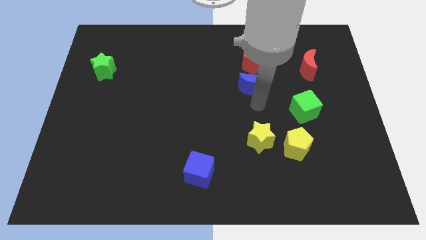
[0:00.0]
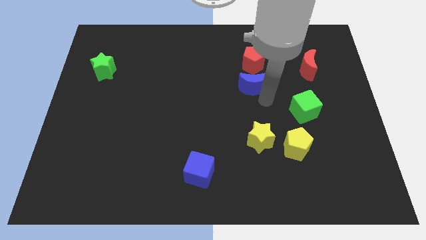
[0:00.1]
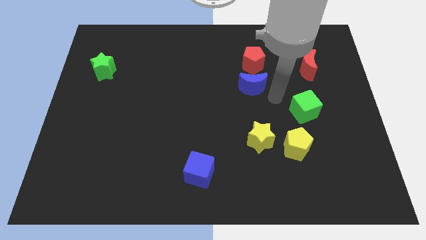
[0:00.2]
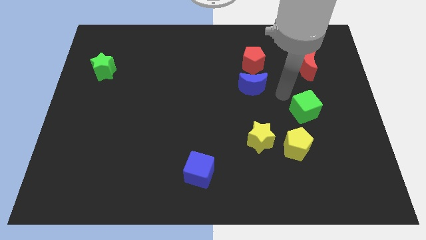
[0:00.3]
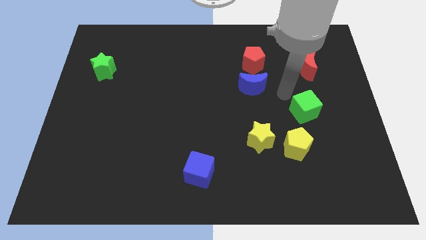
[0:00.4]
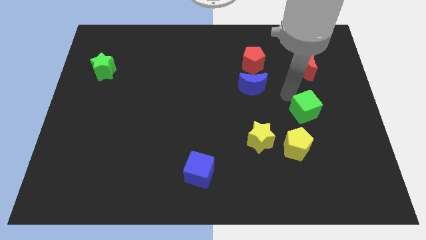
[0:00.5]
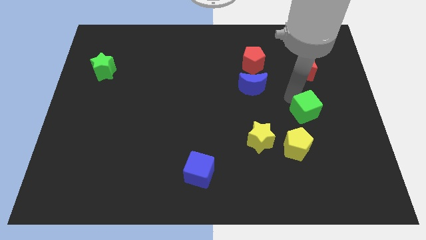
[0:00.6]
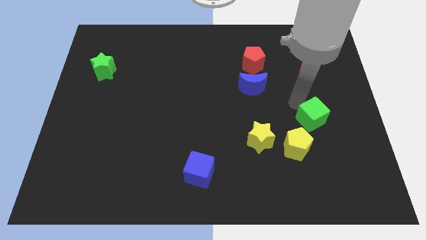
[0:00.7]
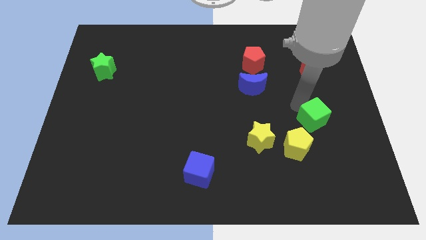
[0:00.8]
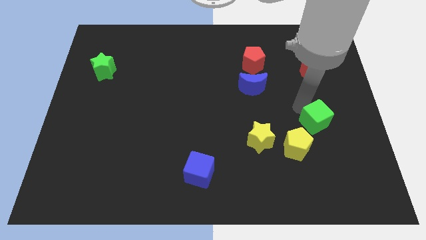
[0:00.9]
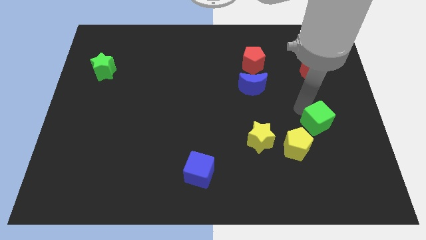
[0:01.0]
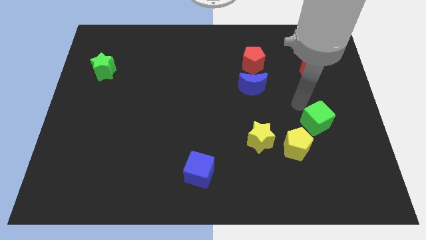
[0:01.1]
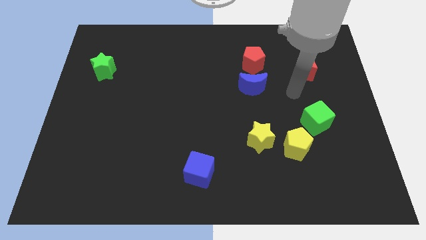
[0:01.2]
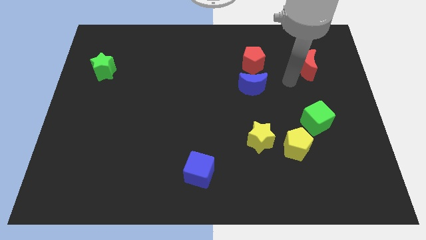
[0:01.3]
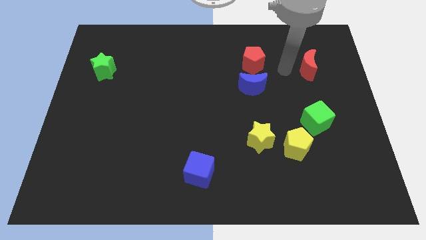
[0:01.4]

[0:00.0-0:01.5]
move the green cube slightly to the right side of the board

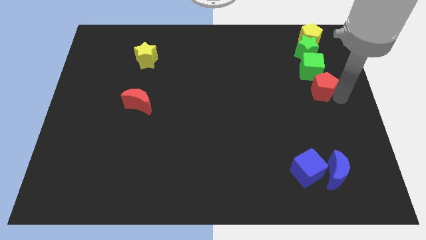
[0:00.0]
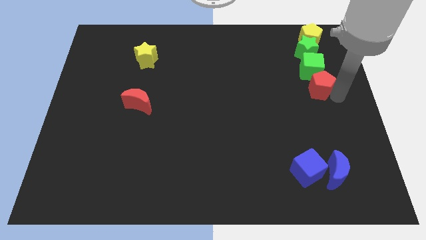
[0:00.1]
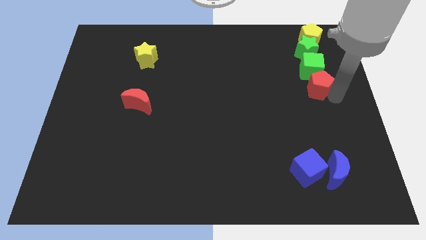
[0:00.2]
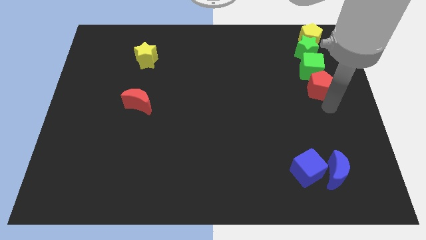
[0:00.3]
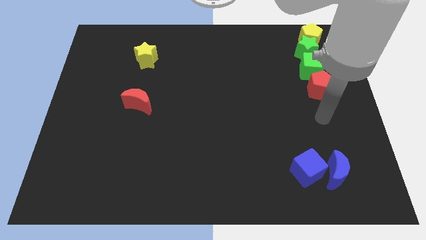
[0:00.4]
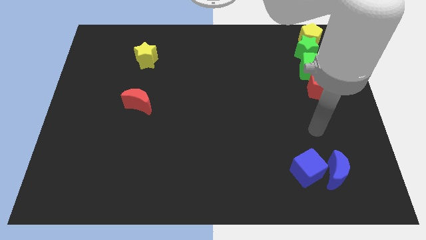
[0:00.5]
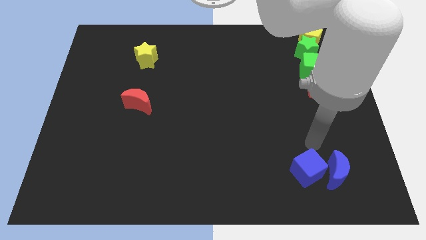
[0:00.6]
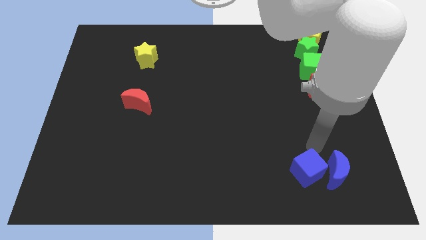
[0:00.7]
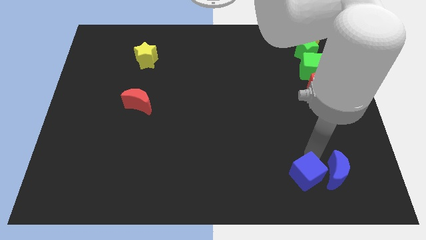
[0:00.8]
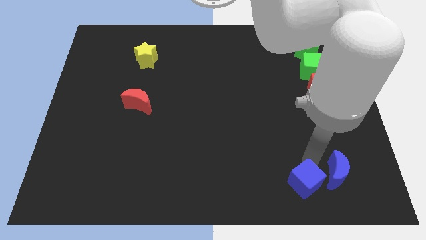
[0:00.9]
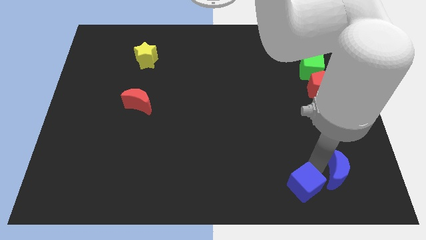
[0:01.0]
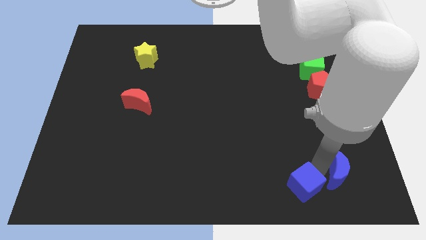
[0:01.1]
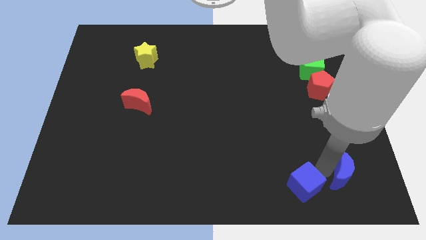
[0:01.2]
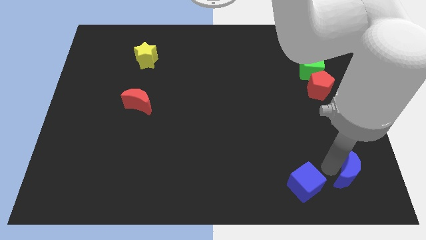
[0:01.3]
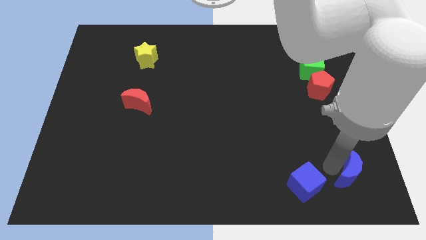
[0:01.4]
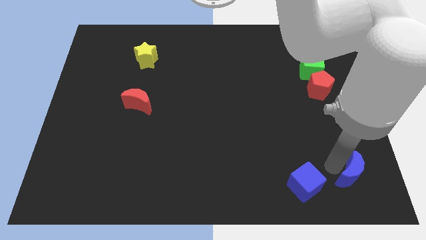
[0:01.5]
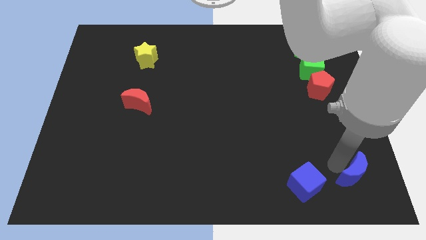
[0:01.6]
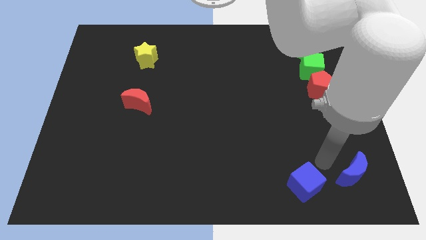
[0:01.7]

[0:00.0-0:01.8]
separate the blue cube and the blue moon towards bottom right side of the board

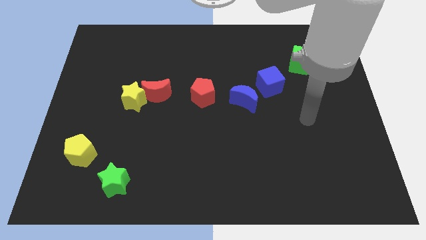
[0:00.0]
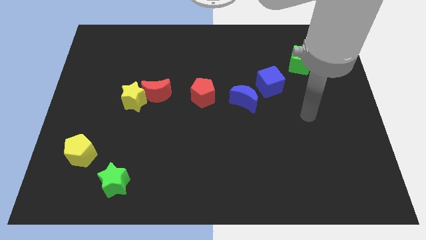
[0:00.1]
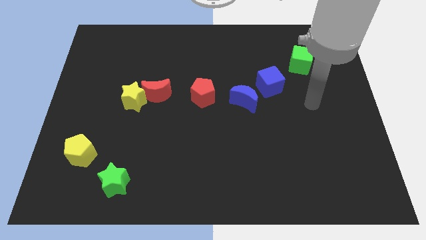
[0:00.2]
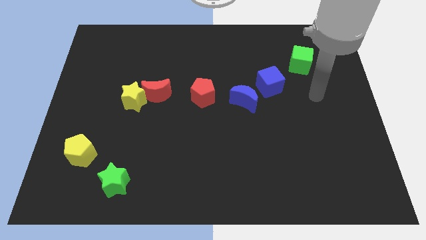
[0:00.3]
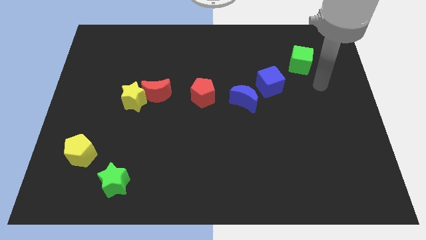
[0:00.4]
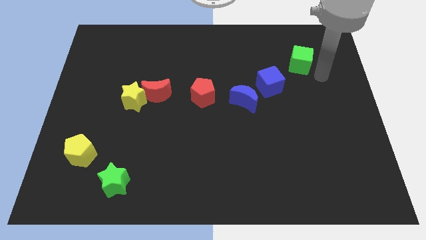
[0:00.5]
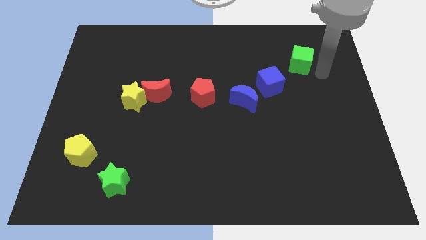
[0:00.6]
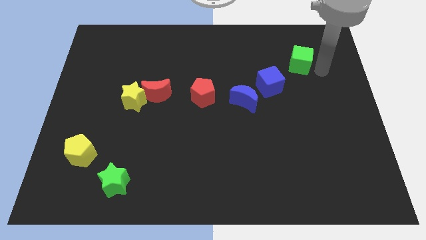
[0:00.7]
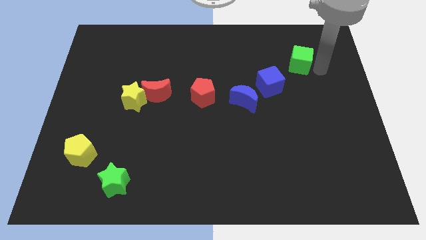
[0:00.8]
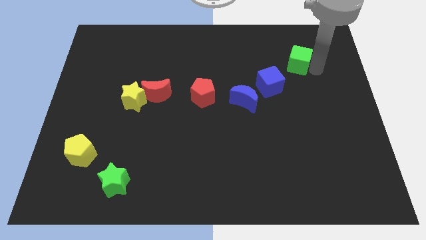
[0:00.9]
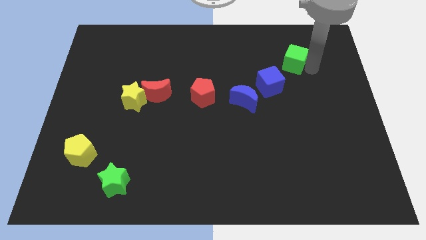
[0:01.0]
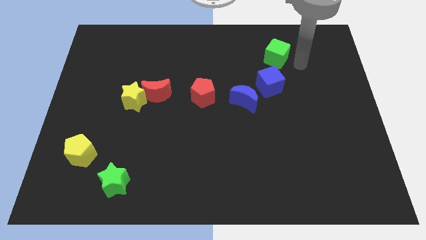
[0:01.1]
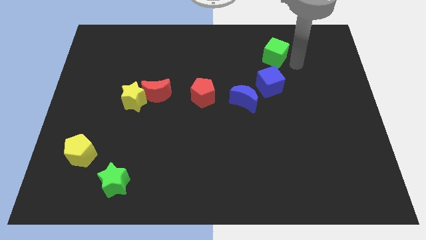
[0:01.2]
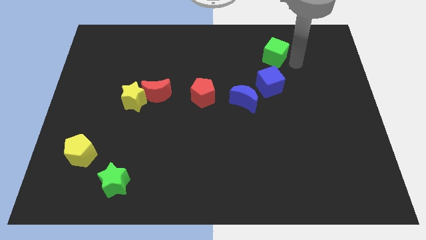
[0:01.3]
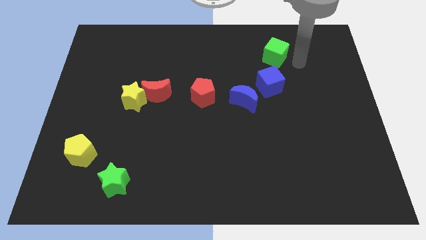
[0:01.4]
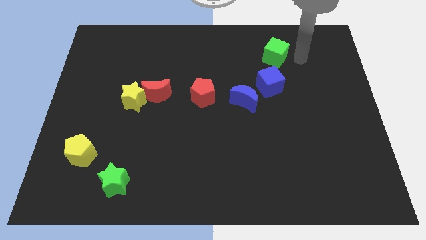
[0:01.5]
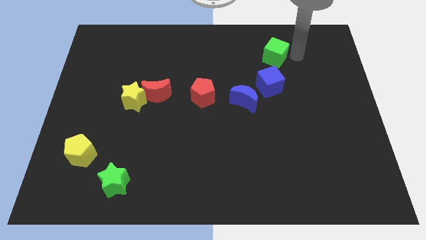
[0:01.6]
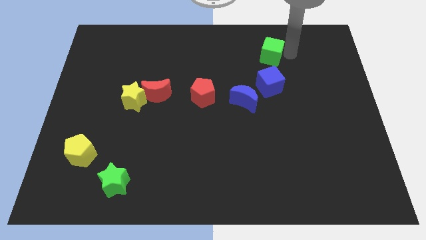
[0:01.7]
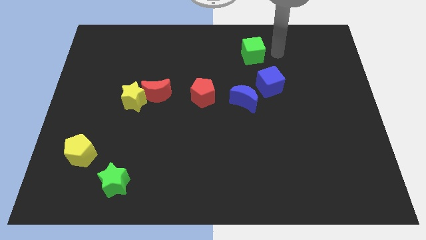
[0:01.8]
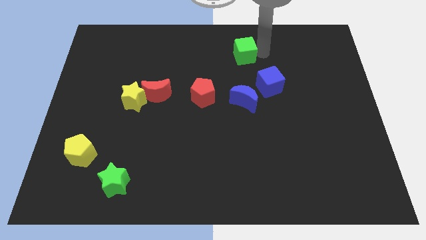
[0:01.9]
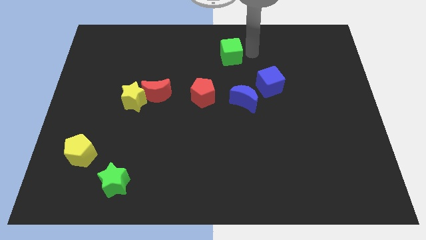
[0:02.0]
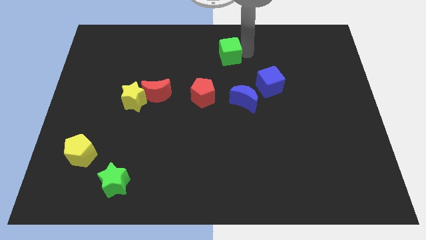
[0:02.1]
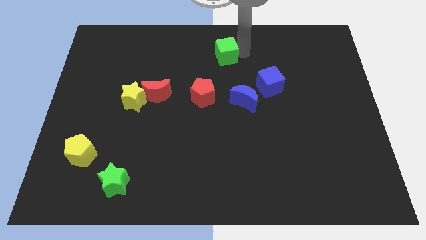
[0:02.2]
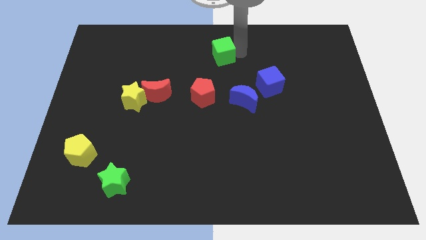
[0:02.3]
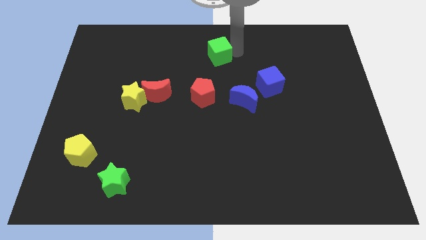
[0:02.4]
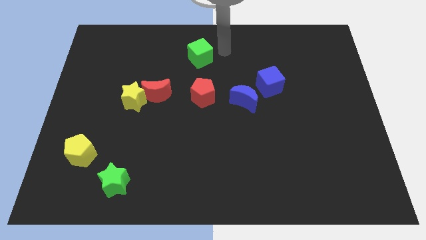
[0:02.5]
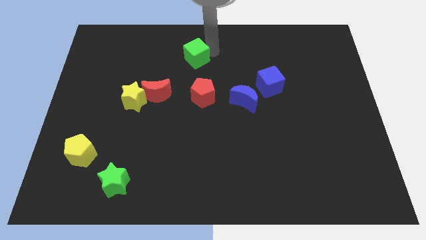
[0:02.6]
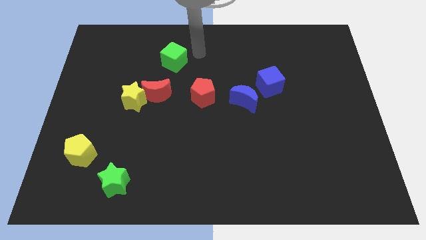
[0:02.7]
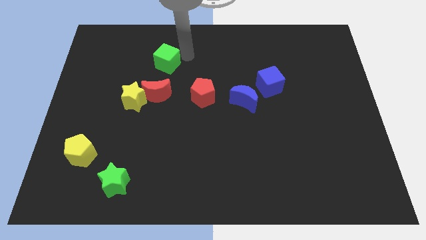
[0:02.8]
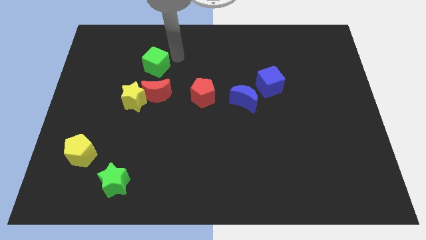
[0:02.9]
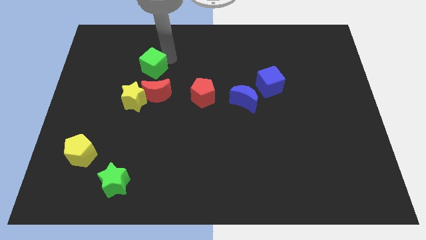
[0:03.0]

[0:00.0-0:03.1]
slide green cube on top of red moon

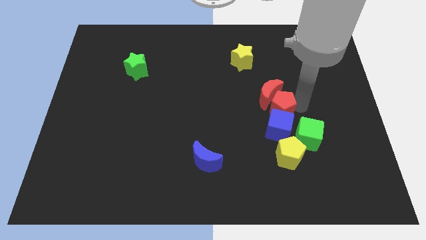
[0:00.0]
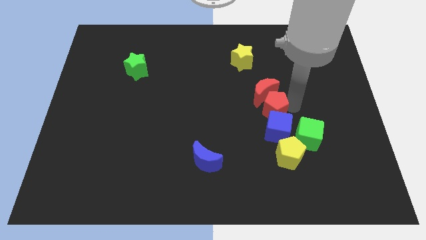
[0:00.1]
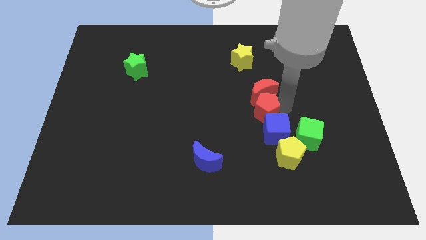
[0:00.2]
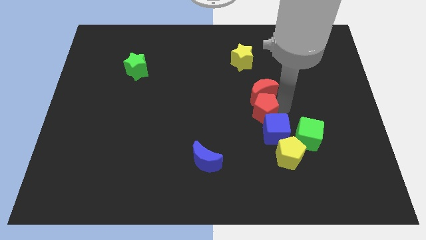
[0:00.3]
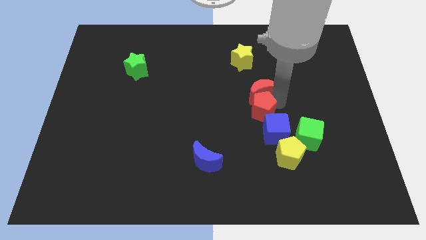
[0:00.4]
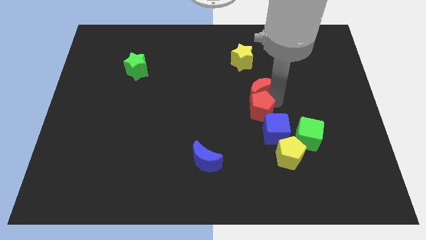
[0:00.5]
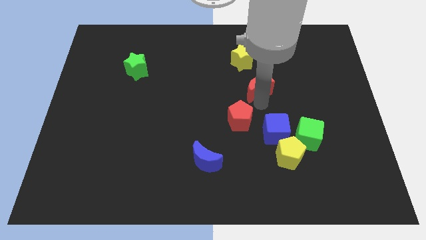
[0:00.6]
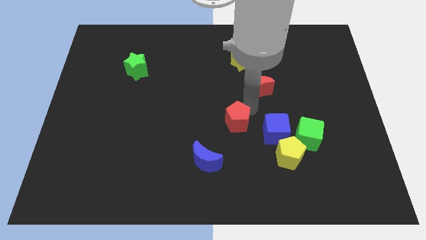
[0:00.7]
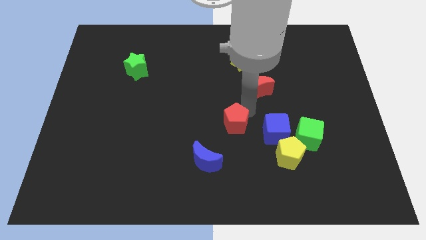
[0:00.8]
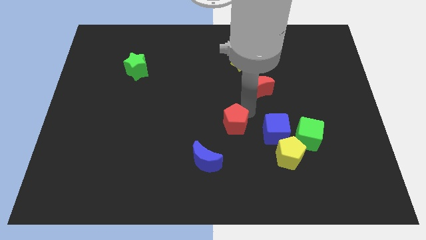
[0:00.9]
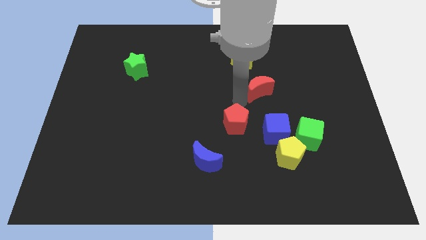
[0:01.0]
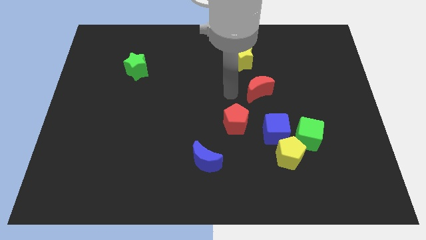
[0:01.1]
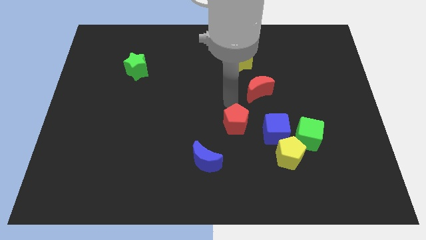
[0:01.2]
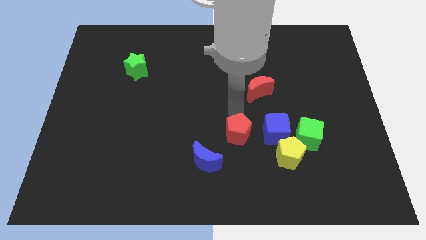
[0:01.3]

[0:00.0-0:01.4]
separate the red pentagon from the red crescent

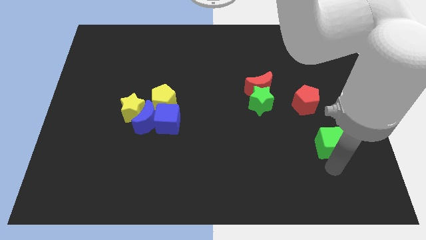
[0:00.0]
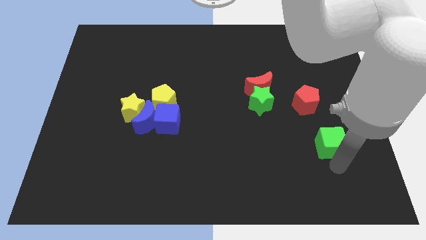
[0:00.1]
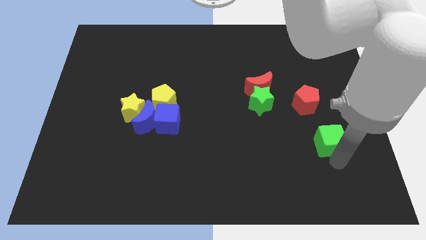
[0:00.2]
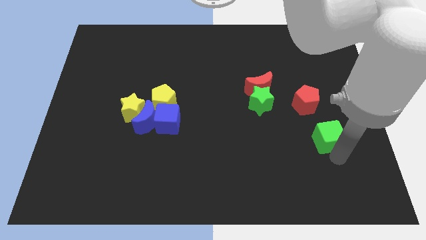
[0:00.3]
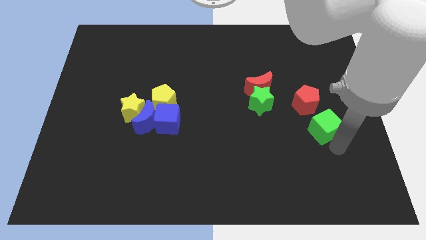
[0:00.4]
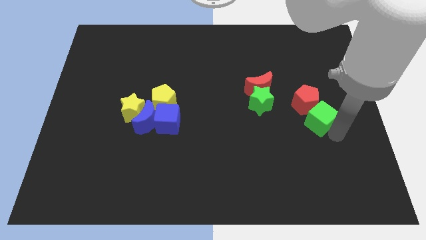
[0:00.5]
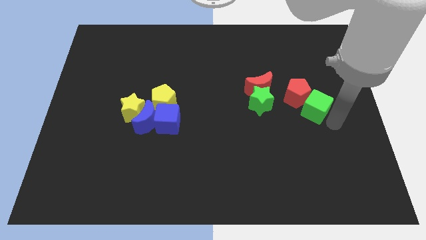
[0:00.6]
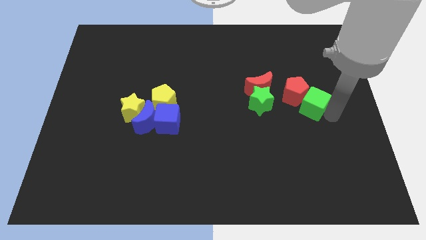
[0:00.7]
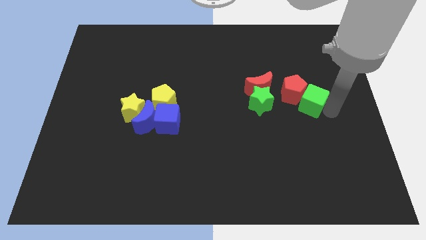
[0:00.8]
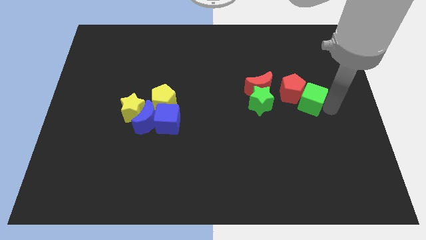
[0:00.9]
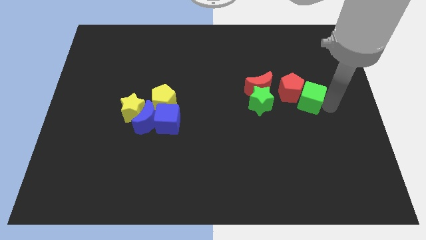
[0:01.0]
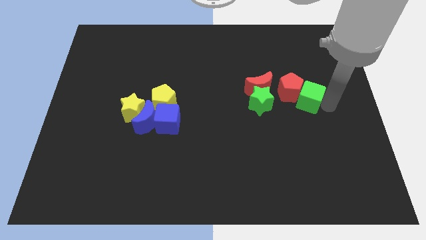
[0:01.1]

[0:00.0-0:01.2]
move the green cube to the right of the red pentagon
